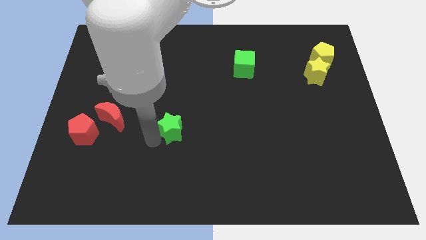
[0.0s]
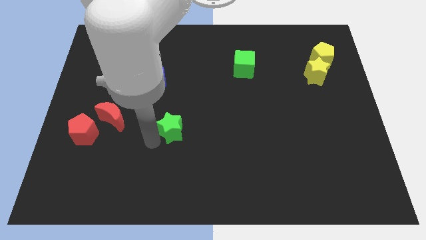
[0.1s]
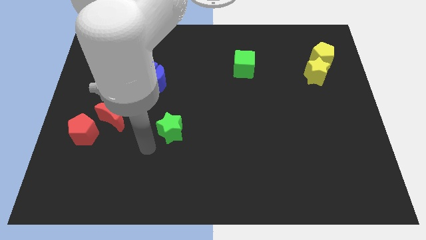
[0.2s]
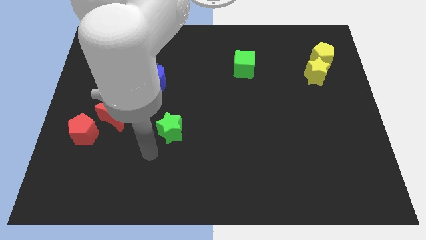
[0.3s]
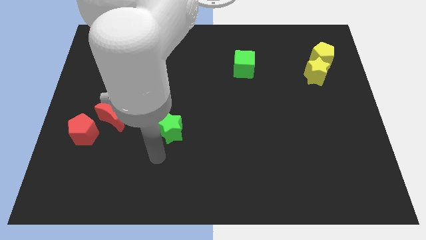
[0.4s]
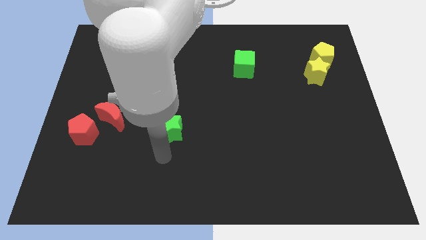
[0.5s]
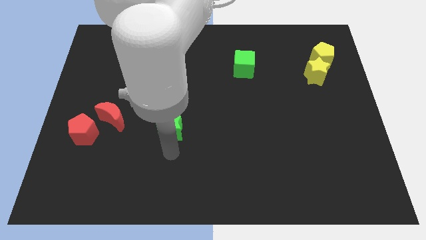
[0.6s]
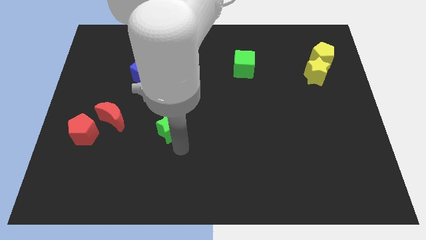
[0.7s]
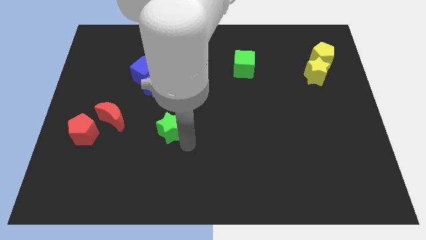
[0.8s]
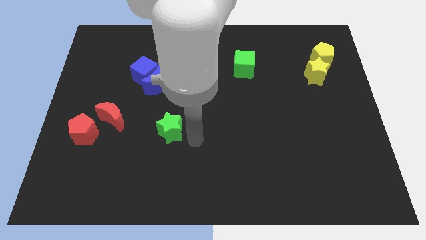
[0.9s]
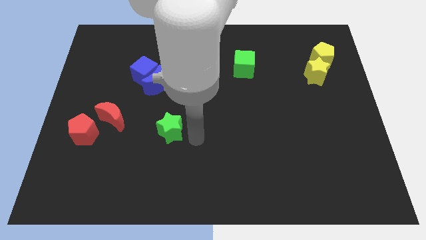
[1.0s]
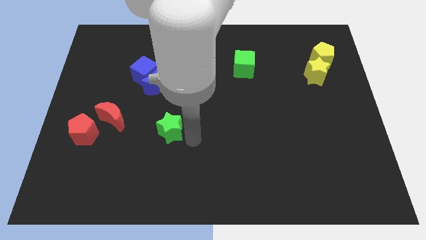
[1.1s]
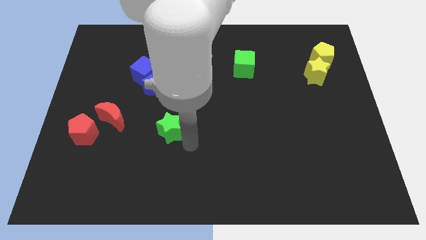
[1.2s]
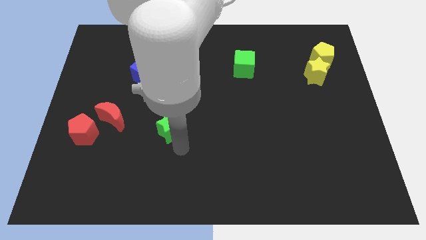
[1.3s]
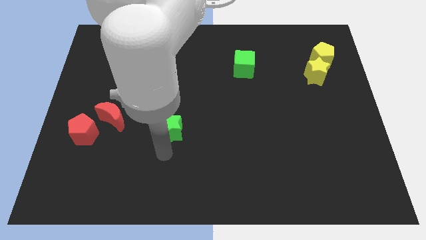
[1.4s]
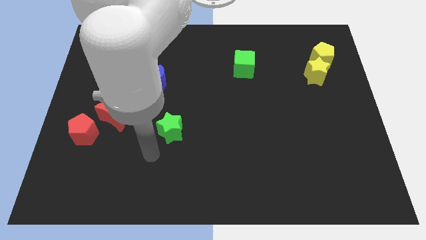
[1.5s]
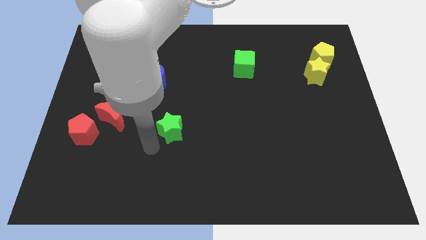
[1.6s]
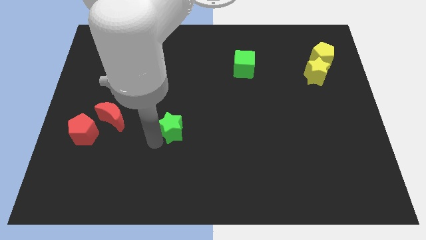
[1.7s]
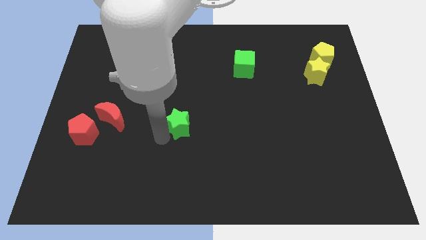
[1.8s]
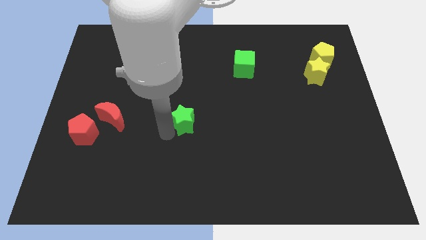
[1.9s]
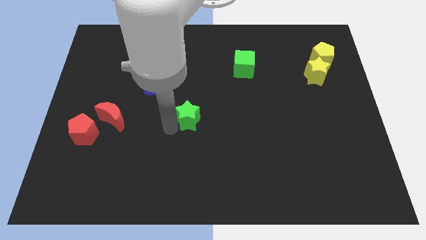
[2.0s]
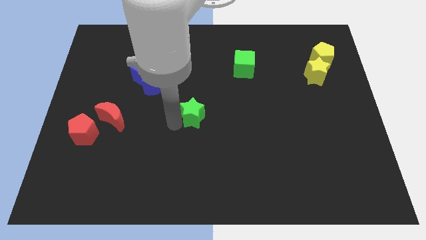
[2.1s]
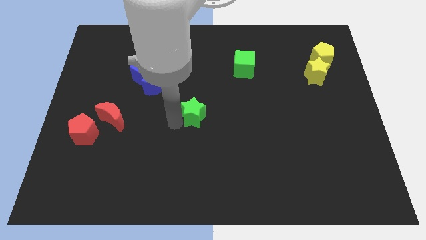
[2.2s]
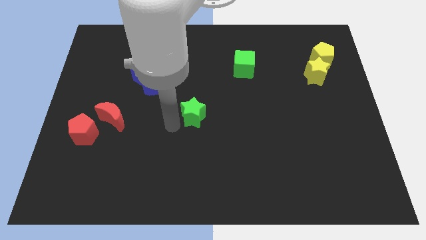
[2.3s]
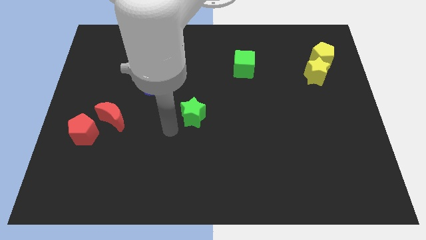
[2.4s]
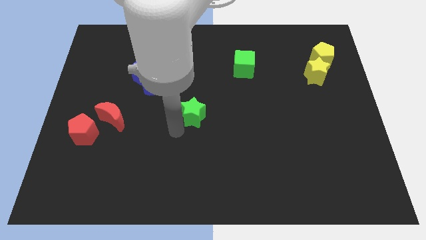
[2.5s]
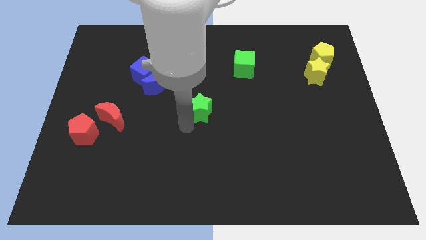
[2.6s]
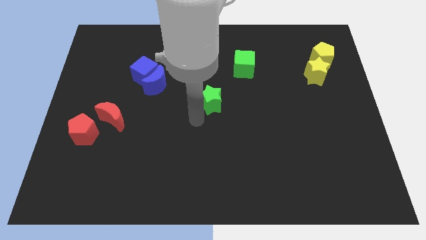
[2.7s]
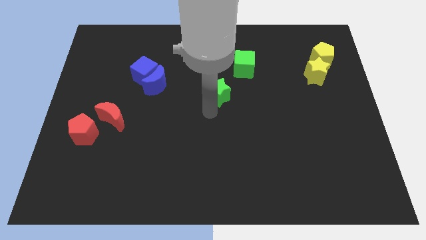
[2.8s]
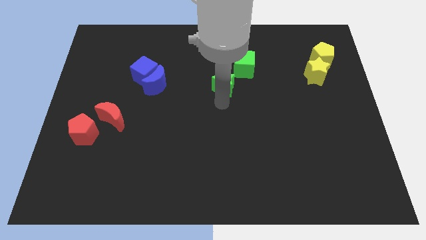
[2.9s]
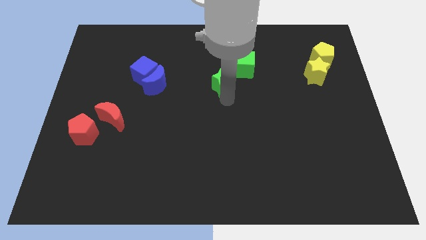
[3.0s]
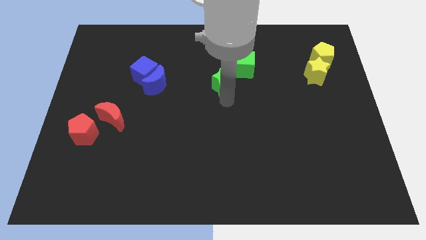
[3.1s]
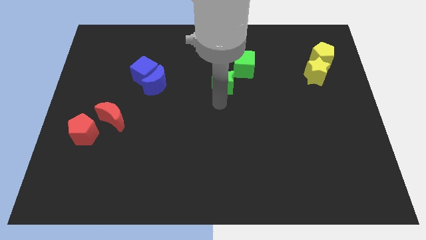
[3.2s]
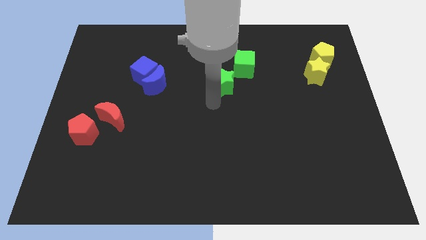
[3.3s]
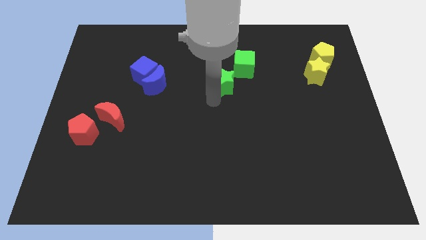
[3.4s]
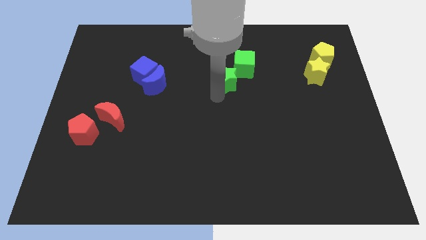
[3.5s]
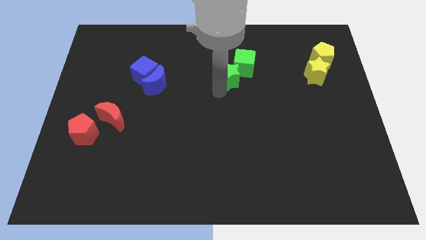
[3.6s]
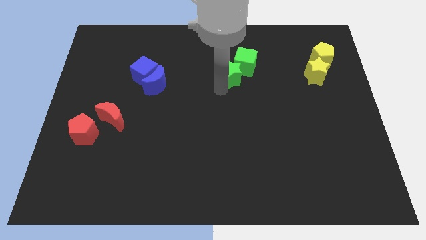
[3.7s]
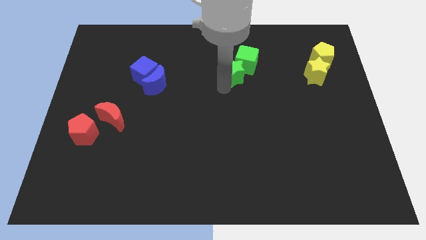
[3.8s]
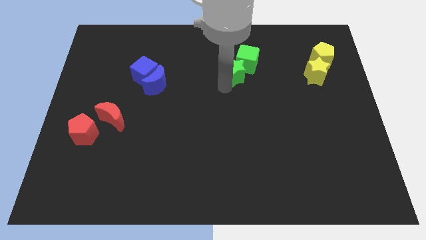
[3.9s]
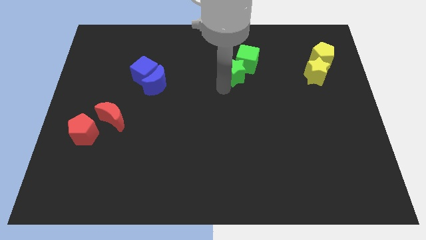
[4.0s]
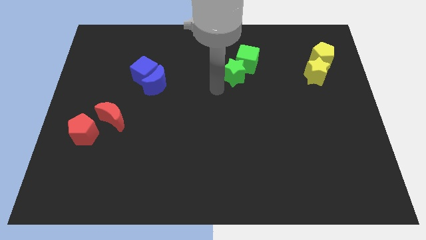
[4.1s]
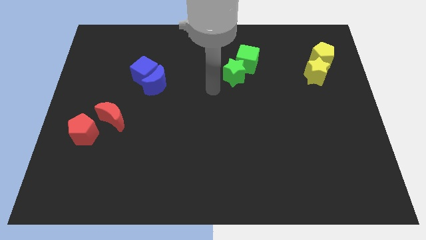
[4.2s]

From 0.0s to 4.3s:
move the green star into the green cube

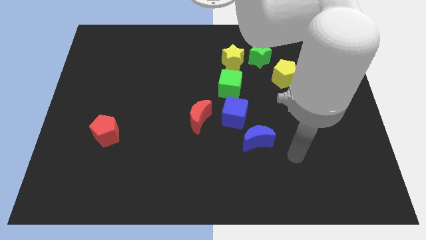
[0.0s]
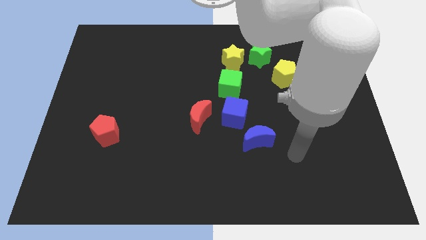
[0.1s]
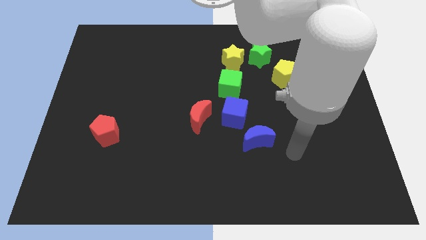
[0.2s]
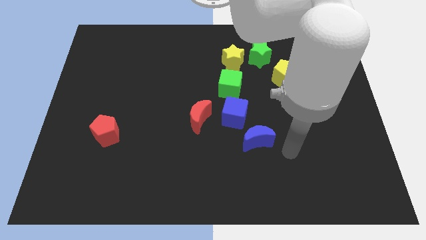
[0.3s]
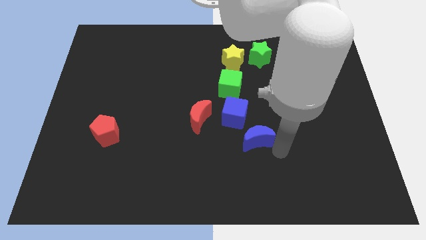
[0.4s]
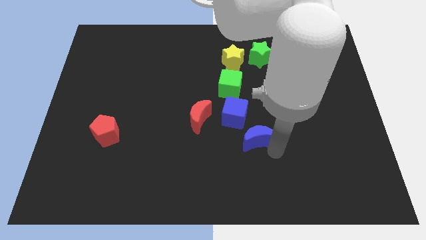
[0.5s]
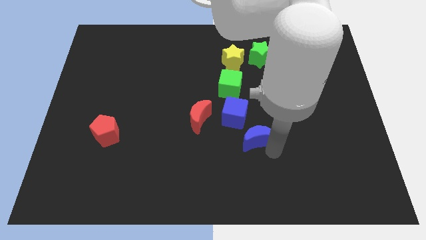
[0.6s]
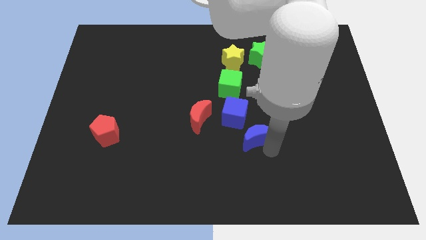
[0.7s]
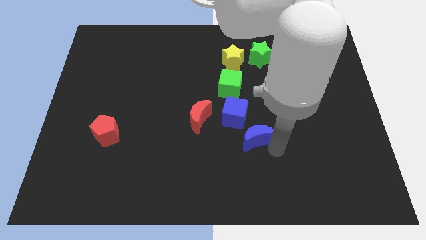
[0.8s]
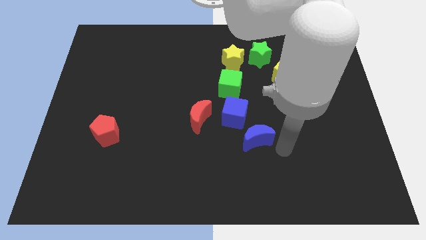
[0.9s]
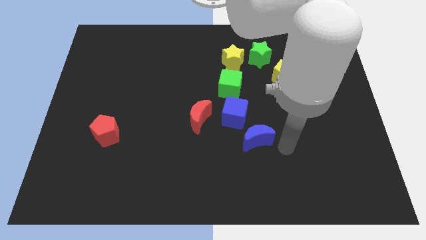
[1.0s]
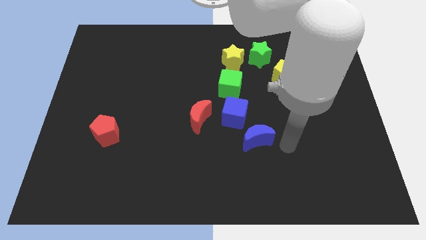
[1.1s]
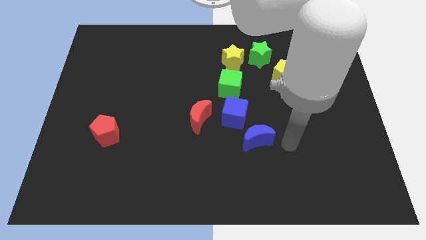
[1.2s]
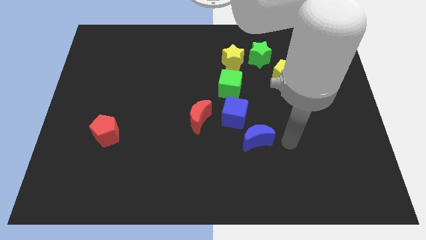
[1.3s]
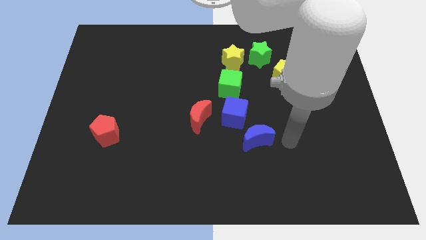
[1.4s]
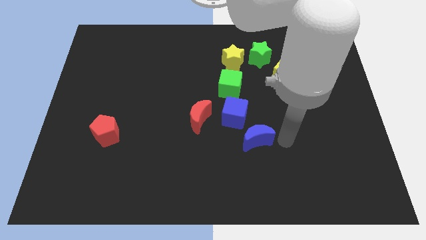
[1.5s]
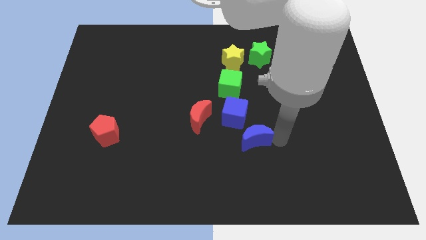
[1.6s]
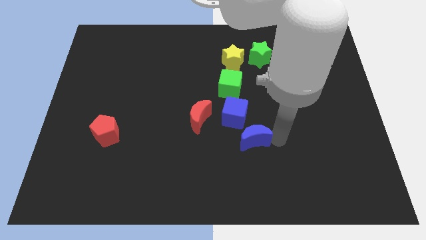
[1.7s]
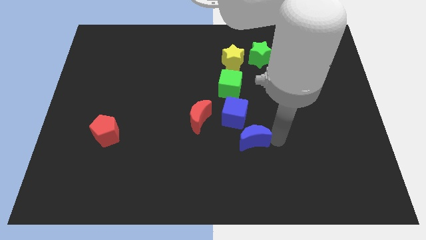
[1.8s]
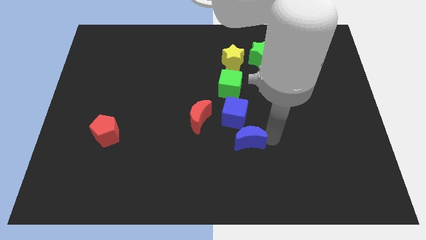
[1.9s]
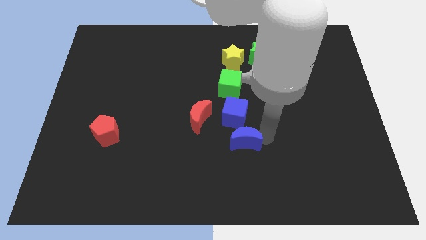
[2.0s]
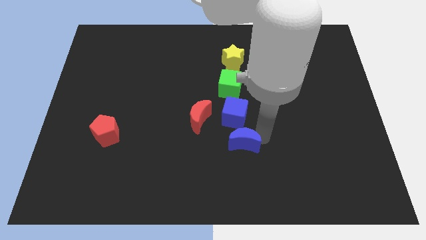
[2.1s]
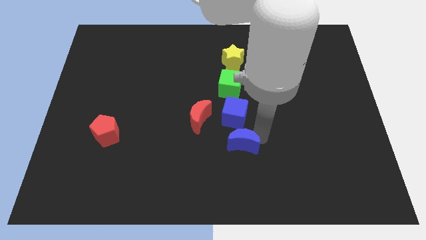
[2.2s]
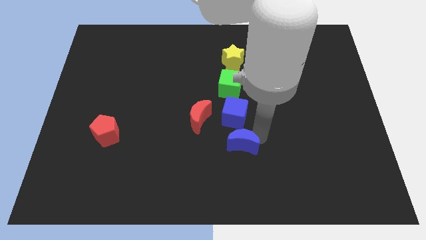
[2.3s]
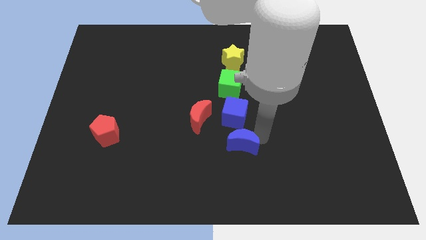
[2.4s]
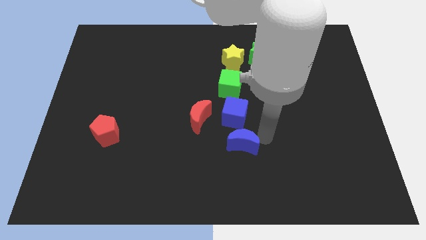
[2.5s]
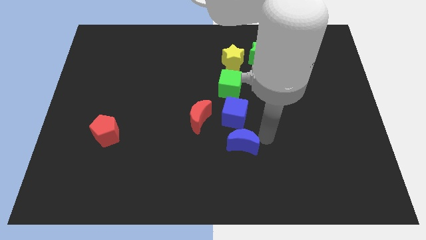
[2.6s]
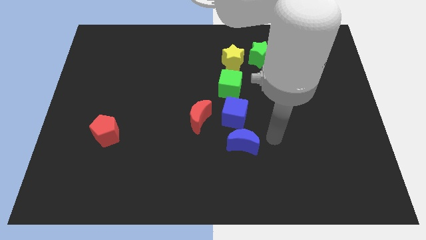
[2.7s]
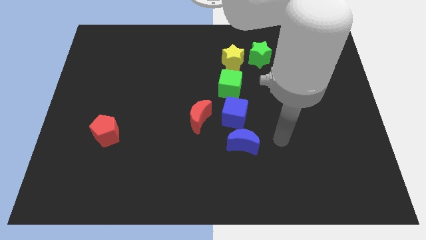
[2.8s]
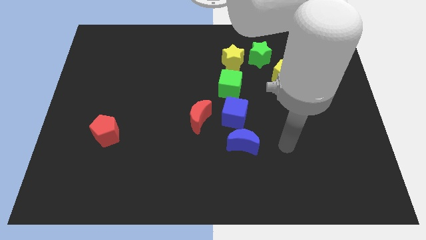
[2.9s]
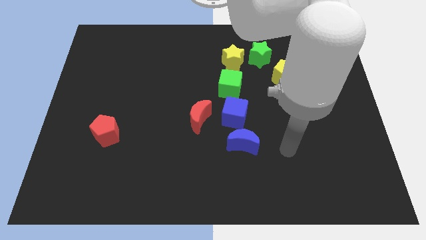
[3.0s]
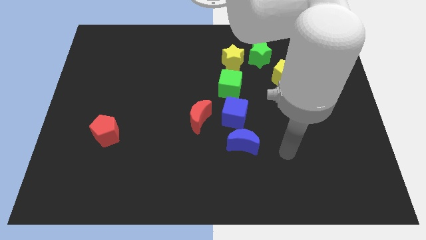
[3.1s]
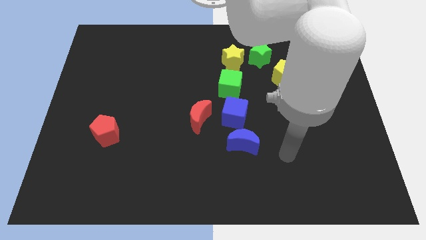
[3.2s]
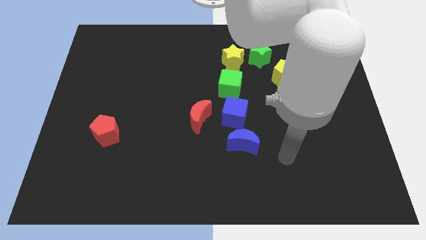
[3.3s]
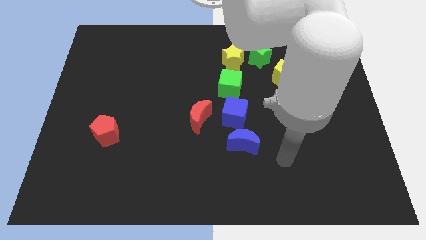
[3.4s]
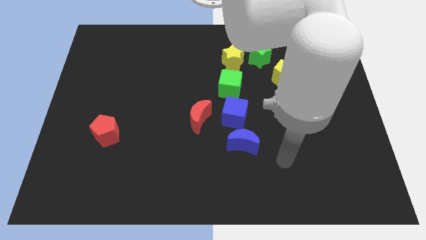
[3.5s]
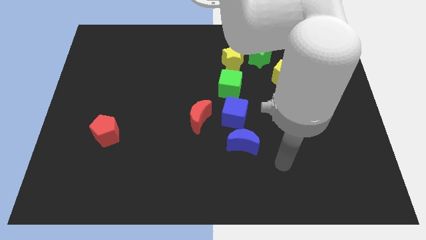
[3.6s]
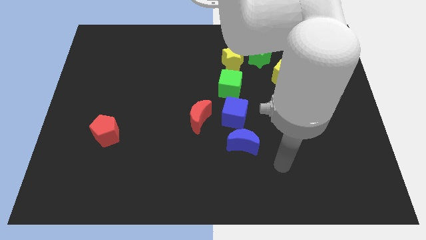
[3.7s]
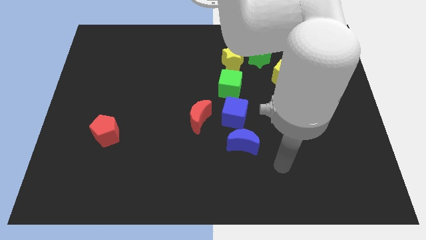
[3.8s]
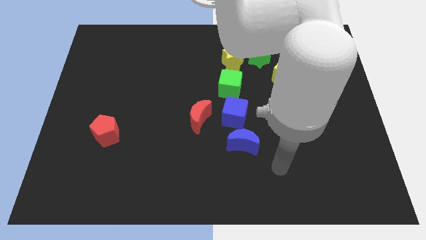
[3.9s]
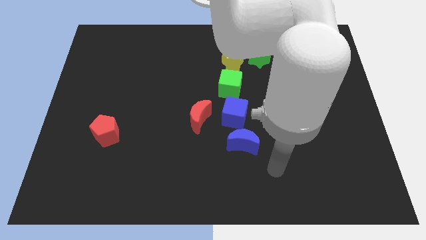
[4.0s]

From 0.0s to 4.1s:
move the blue crescent to the bottom of the blue cube

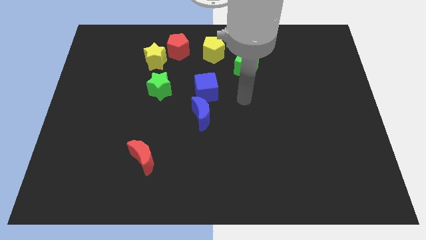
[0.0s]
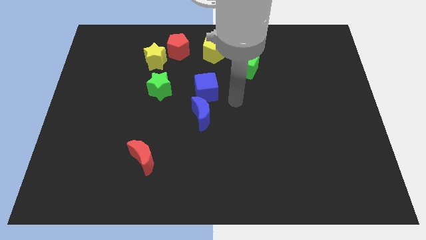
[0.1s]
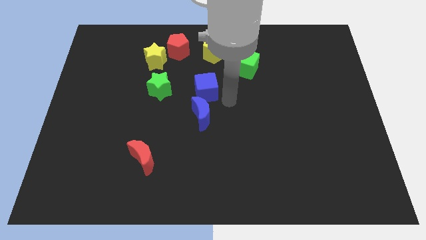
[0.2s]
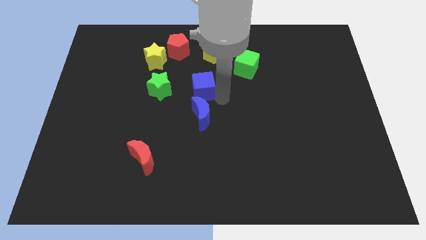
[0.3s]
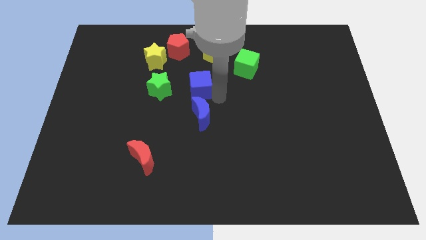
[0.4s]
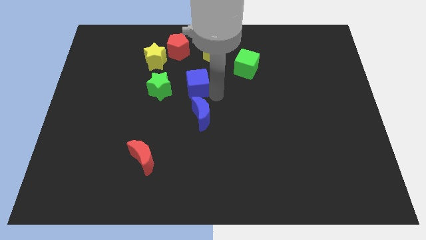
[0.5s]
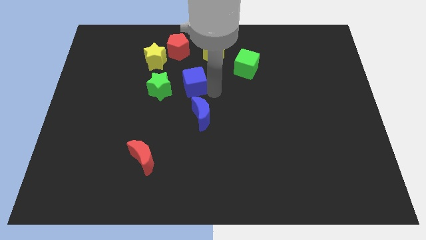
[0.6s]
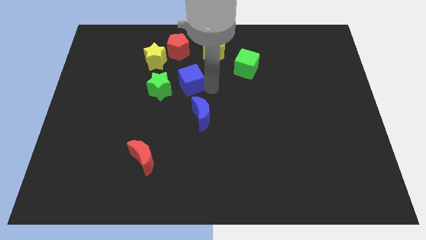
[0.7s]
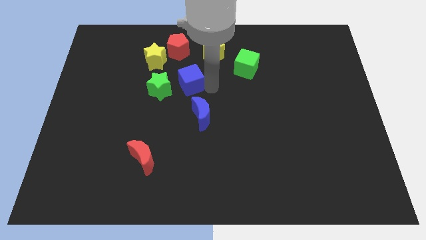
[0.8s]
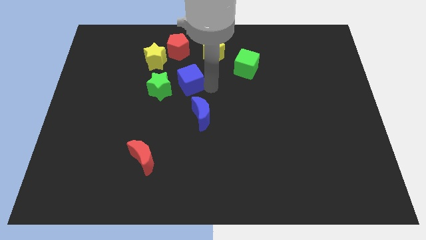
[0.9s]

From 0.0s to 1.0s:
push blue cube beside green star
